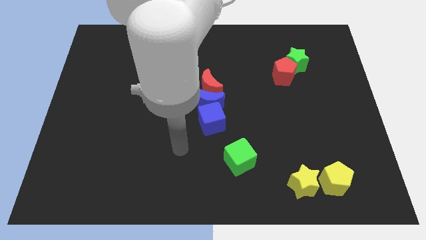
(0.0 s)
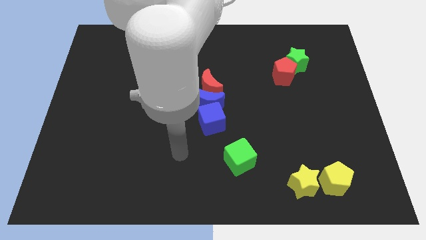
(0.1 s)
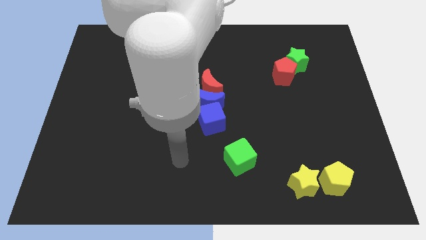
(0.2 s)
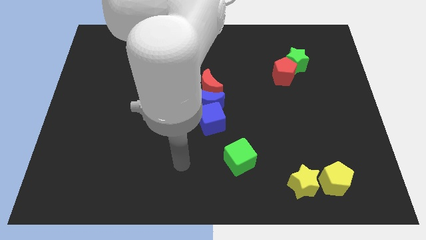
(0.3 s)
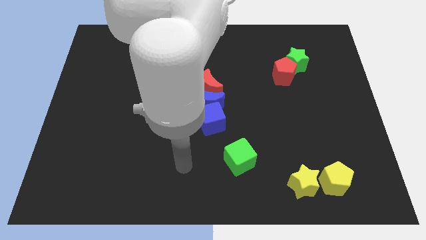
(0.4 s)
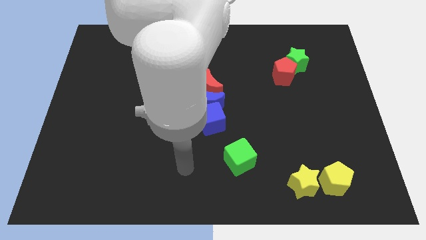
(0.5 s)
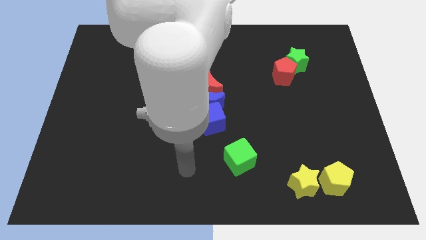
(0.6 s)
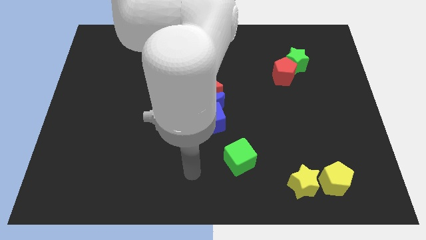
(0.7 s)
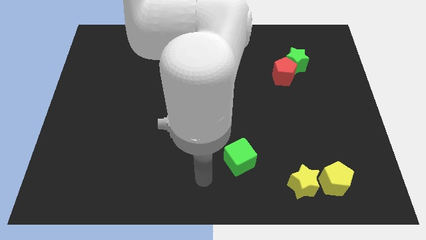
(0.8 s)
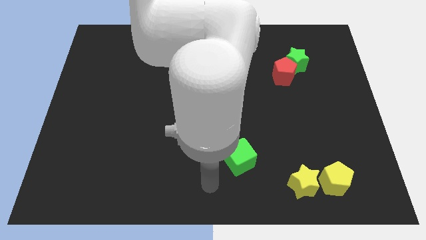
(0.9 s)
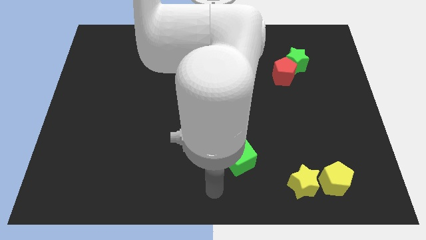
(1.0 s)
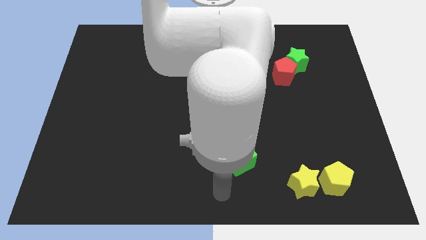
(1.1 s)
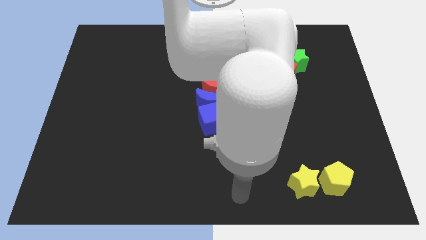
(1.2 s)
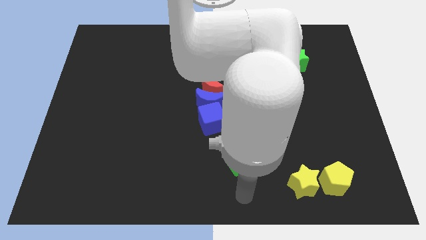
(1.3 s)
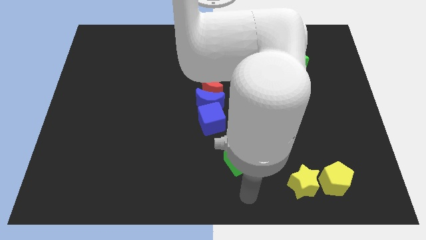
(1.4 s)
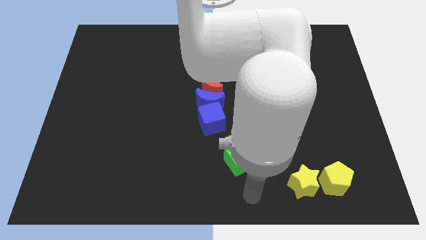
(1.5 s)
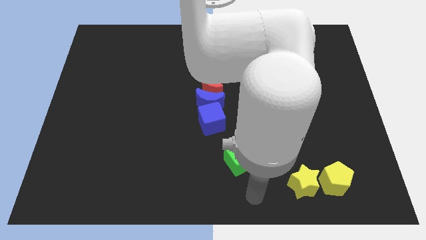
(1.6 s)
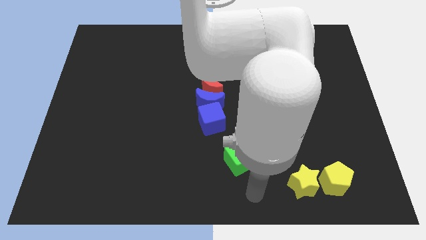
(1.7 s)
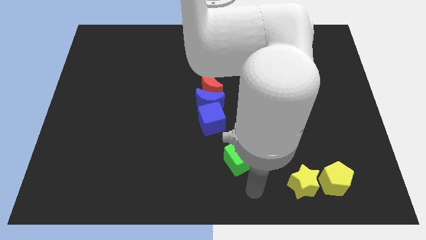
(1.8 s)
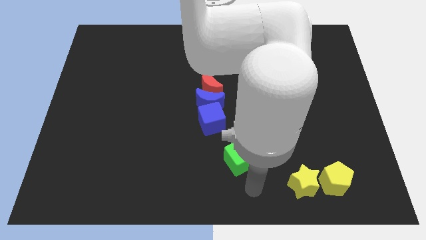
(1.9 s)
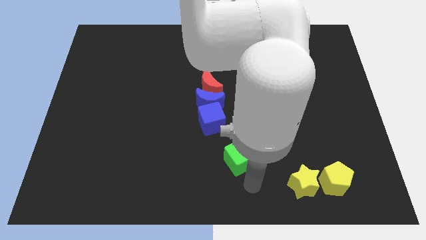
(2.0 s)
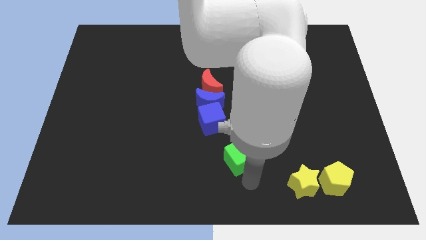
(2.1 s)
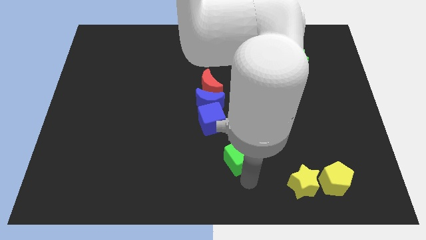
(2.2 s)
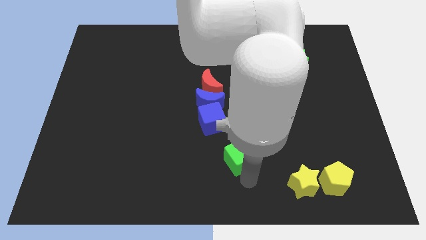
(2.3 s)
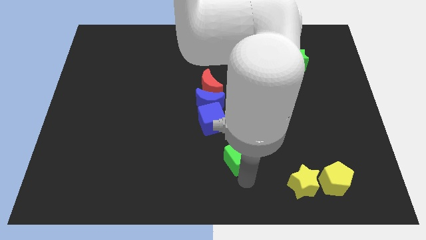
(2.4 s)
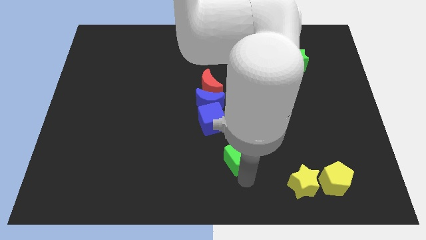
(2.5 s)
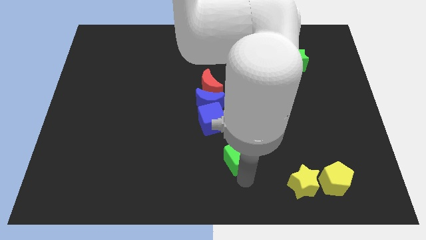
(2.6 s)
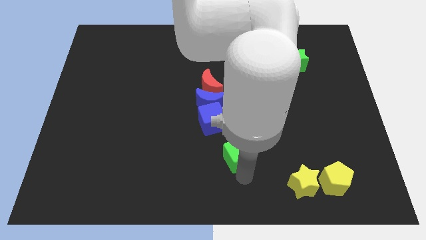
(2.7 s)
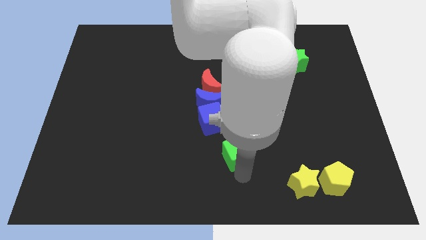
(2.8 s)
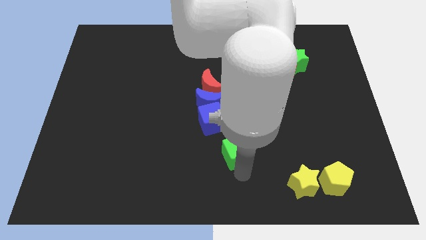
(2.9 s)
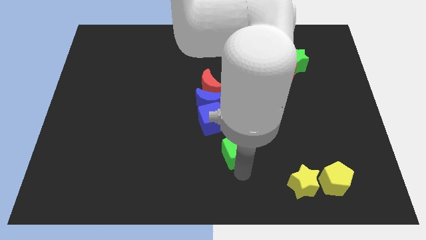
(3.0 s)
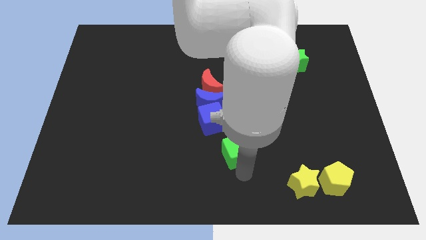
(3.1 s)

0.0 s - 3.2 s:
move the arm near to the green star and slightly push the green star

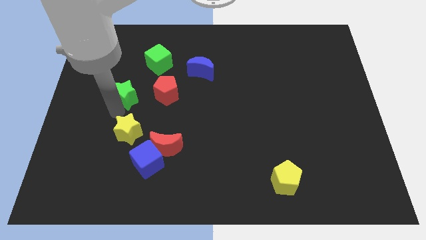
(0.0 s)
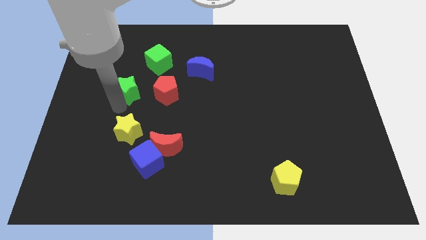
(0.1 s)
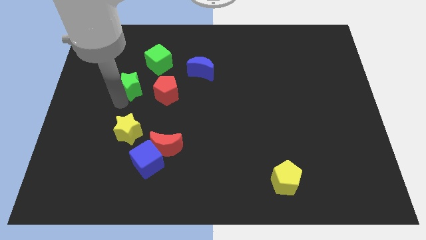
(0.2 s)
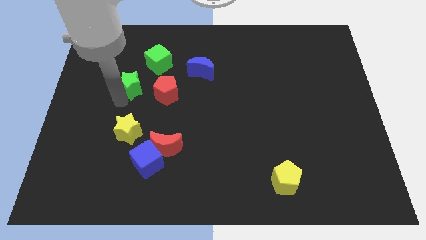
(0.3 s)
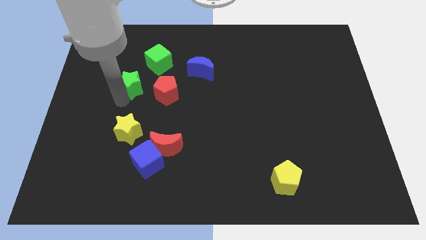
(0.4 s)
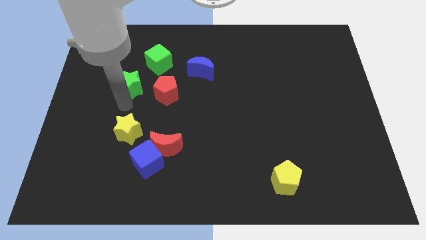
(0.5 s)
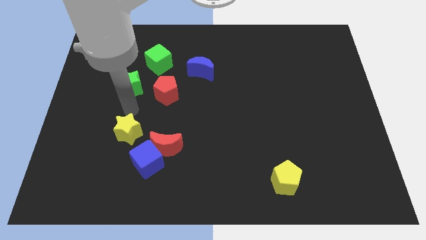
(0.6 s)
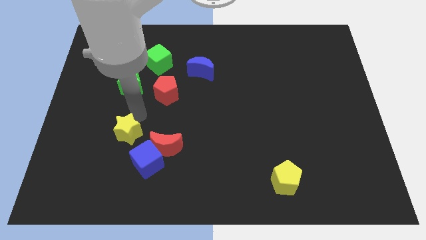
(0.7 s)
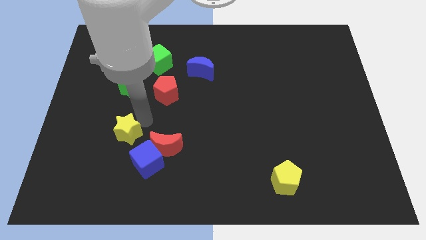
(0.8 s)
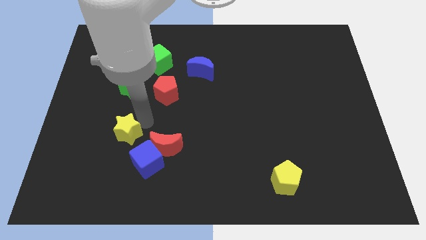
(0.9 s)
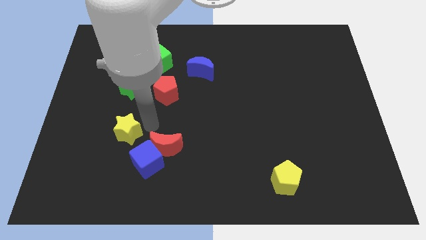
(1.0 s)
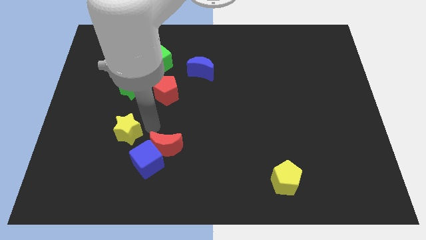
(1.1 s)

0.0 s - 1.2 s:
move the green star diagonally to the bottom left to the green cube

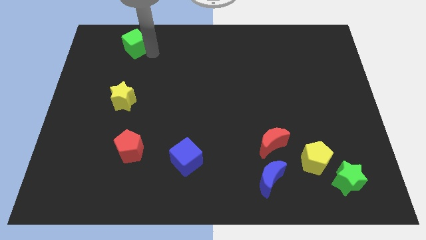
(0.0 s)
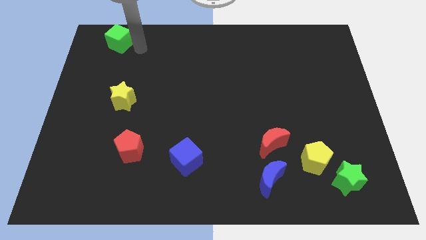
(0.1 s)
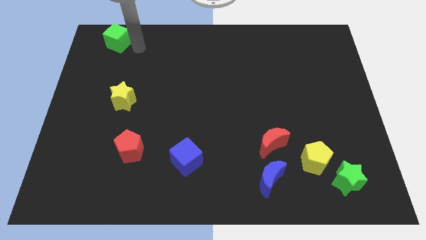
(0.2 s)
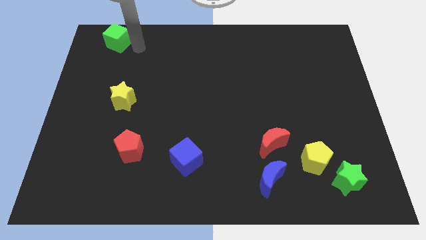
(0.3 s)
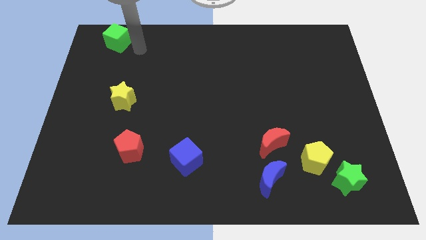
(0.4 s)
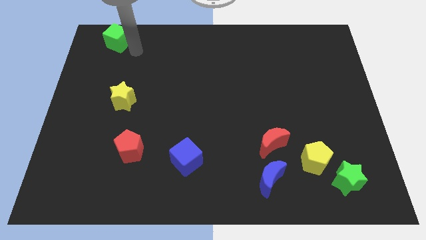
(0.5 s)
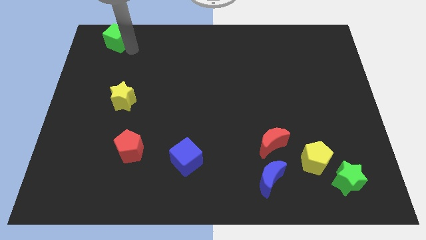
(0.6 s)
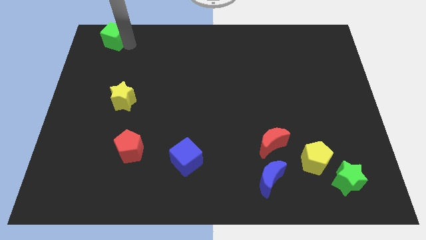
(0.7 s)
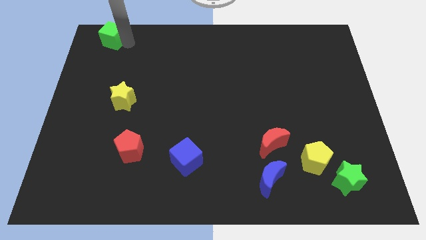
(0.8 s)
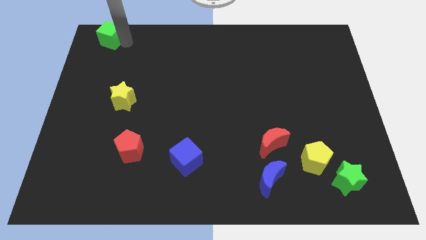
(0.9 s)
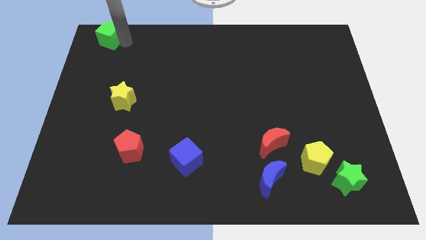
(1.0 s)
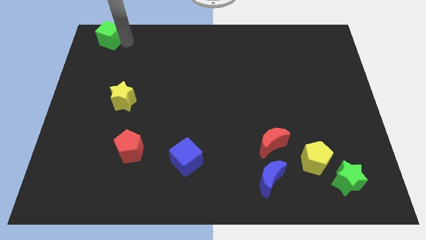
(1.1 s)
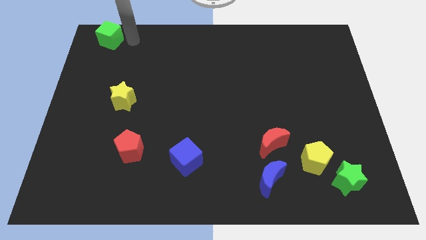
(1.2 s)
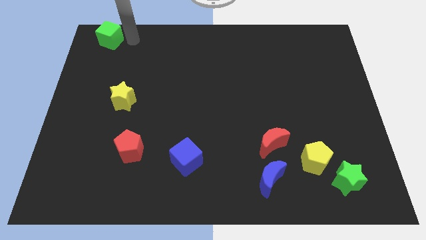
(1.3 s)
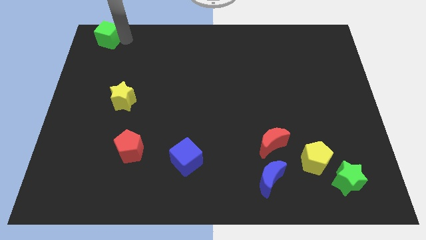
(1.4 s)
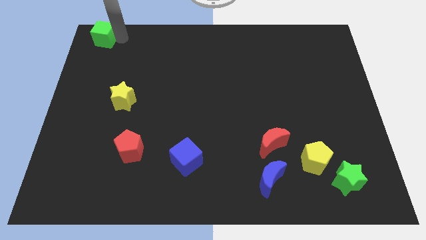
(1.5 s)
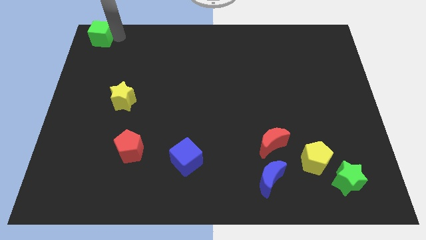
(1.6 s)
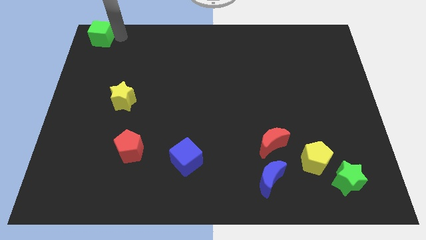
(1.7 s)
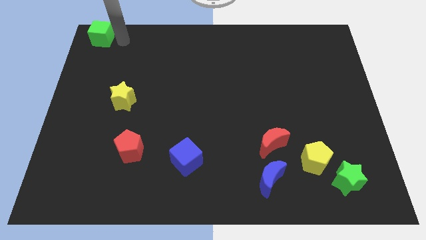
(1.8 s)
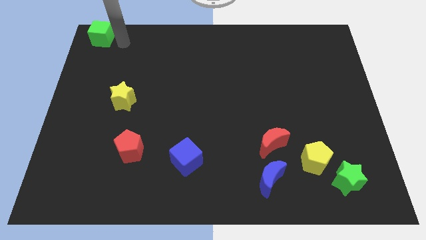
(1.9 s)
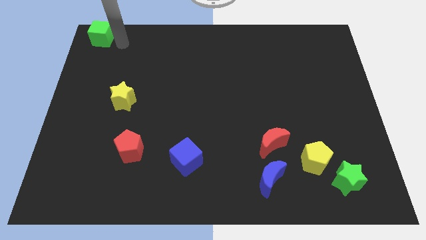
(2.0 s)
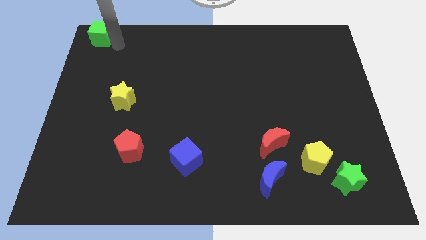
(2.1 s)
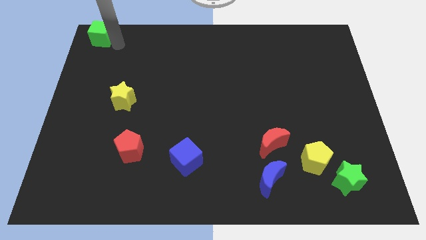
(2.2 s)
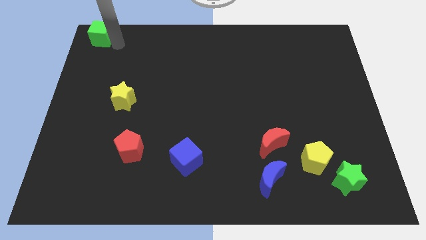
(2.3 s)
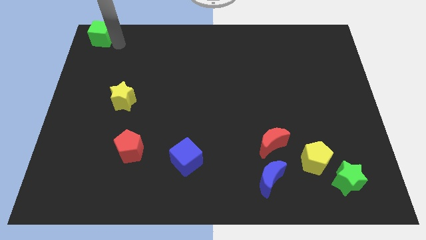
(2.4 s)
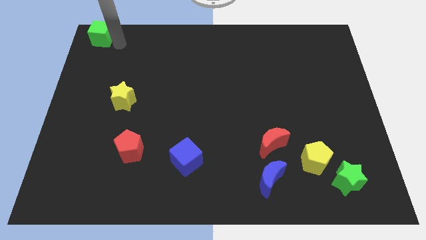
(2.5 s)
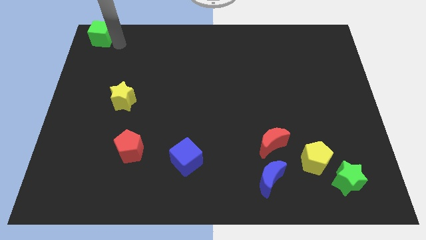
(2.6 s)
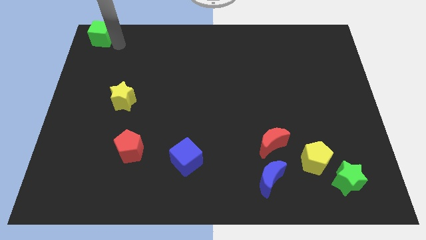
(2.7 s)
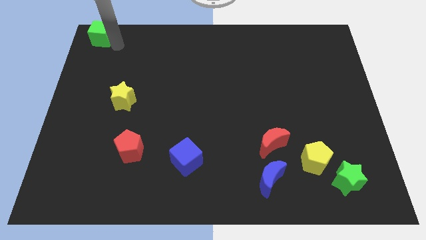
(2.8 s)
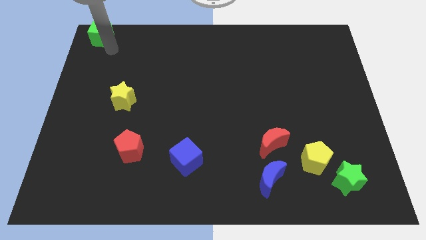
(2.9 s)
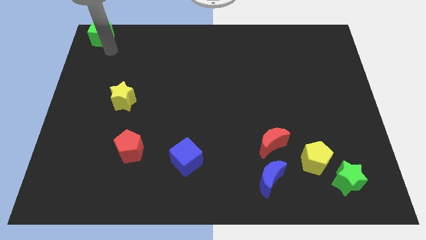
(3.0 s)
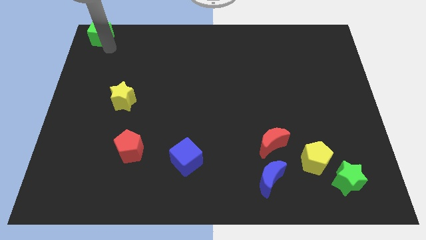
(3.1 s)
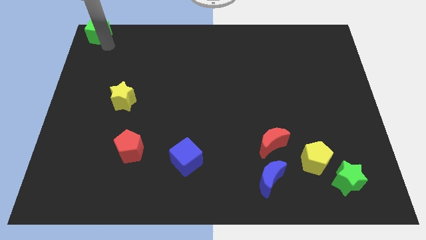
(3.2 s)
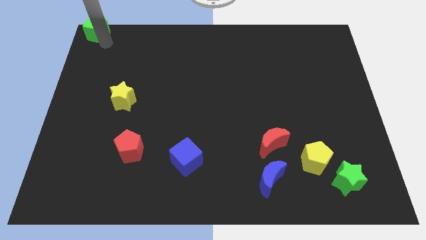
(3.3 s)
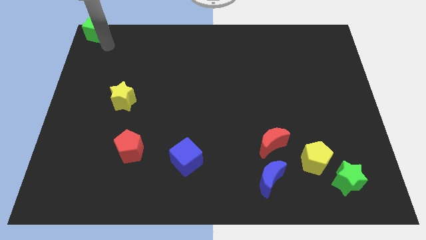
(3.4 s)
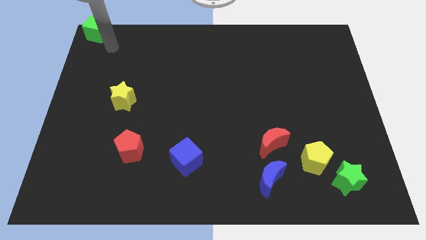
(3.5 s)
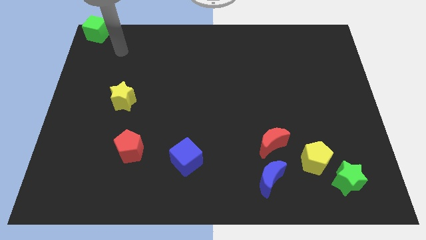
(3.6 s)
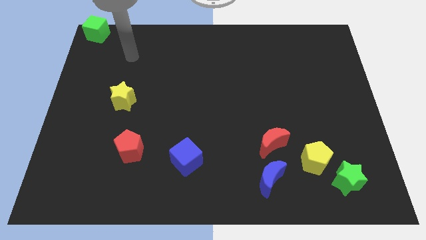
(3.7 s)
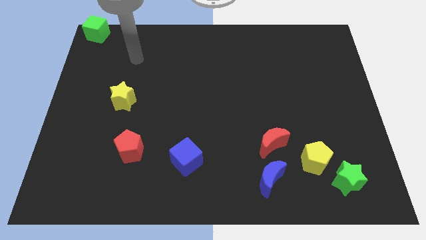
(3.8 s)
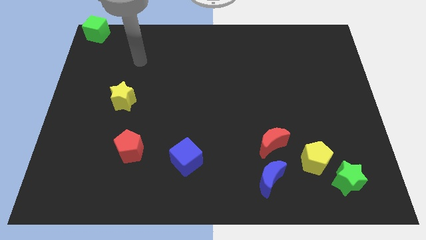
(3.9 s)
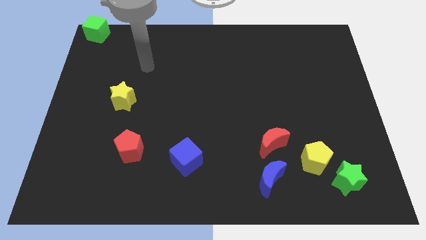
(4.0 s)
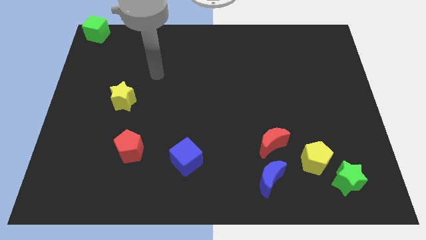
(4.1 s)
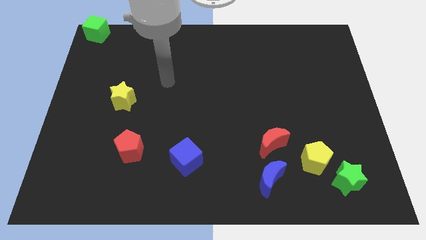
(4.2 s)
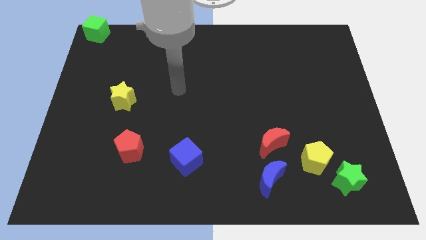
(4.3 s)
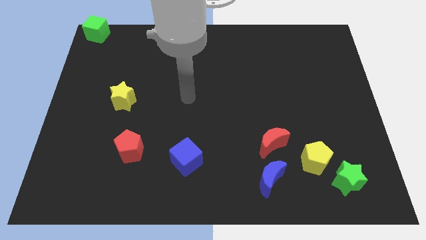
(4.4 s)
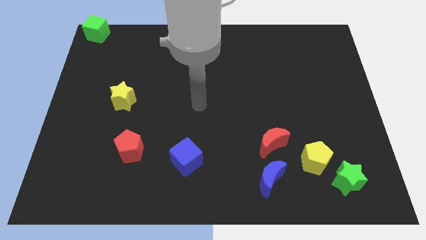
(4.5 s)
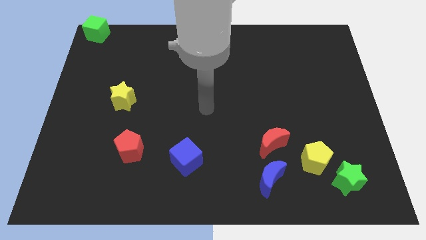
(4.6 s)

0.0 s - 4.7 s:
move the green cube to the top left corner
